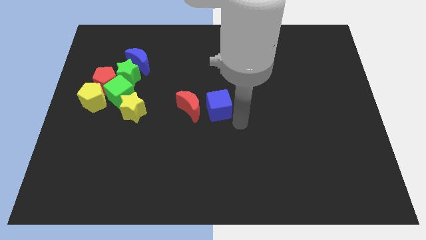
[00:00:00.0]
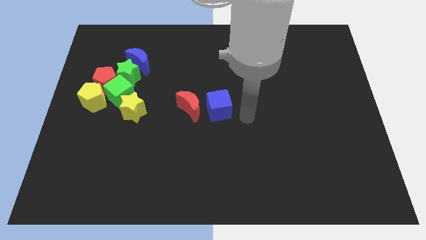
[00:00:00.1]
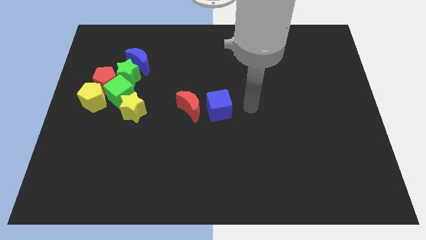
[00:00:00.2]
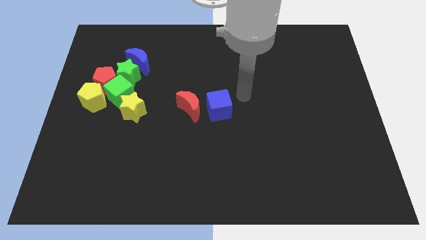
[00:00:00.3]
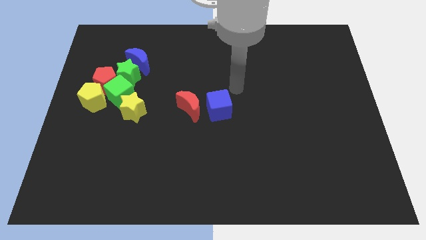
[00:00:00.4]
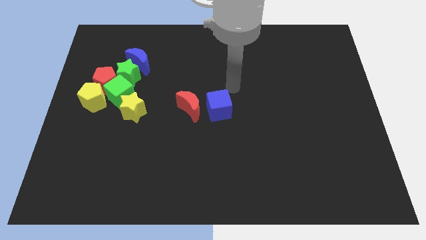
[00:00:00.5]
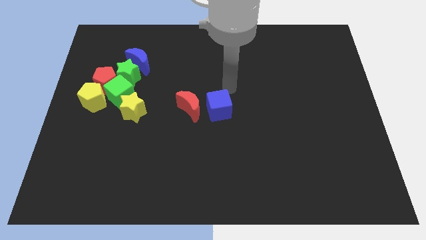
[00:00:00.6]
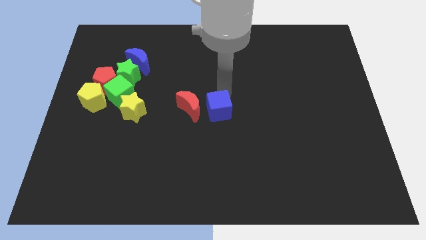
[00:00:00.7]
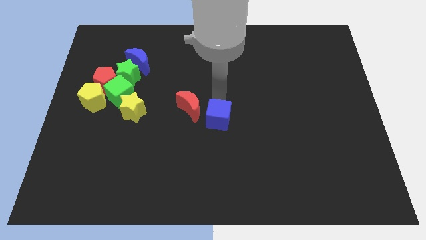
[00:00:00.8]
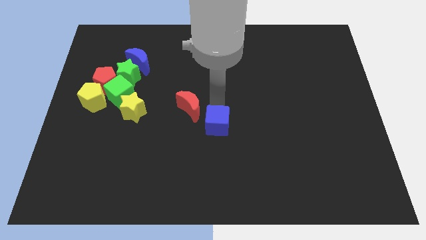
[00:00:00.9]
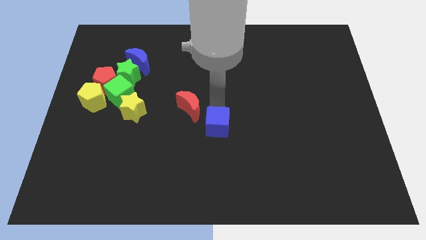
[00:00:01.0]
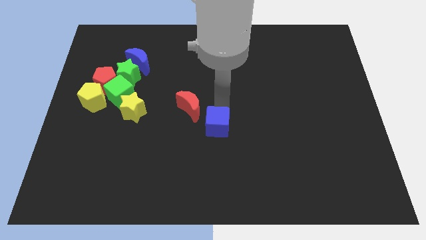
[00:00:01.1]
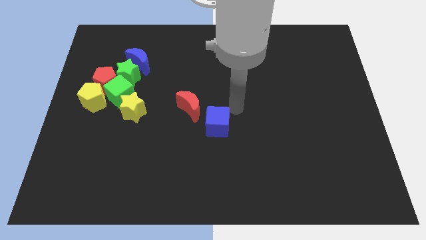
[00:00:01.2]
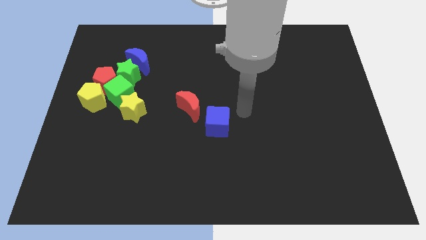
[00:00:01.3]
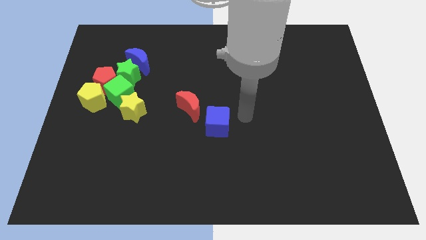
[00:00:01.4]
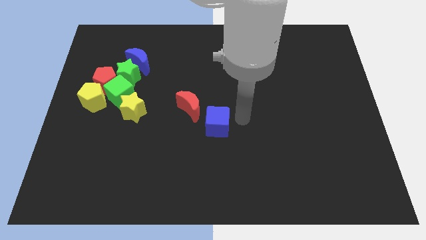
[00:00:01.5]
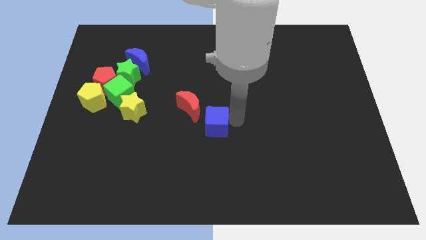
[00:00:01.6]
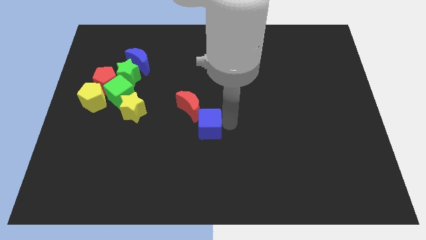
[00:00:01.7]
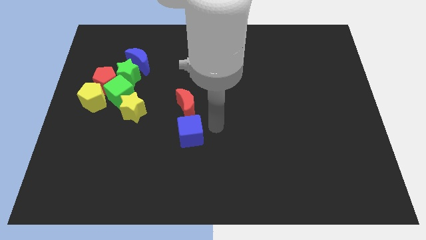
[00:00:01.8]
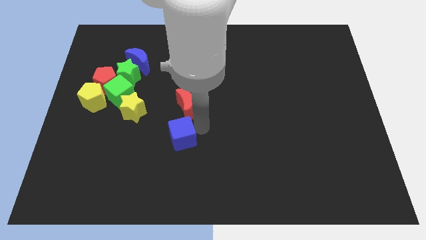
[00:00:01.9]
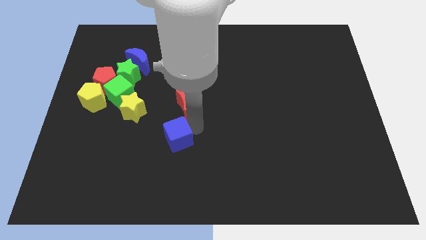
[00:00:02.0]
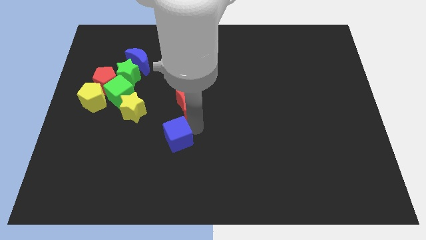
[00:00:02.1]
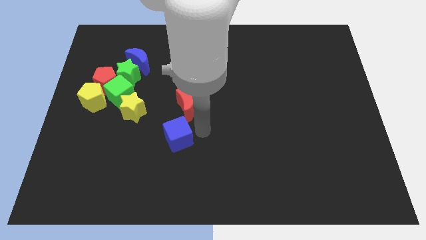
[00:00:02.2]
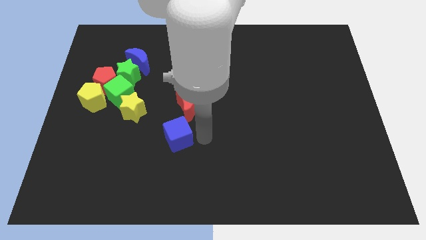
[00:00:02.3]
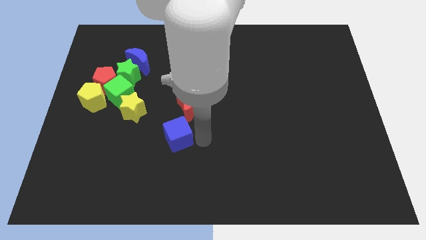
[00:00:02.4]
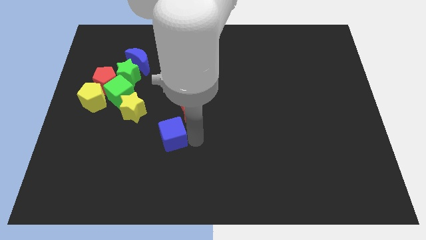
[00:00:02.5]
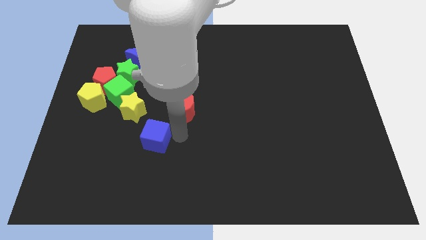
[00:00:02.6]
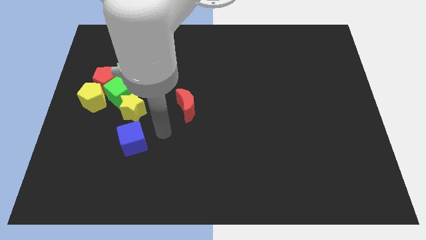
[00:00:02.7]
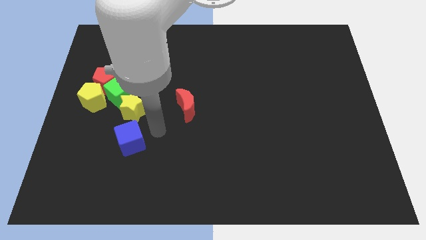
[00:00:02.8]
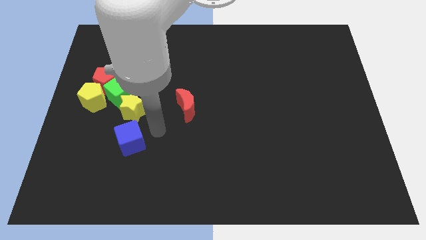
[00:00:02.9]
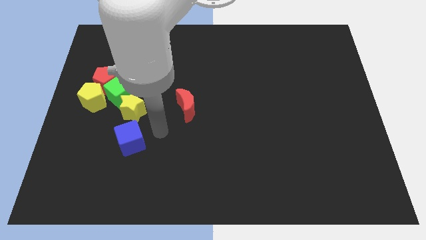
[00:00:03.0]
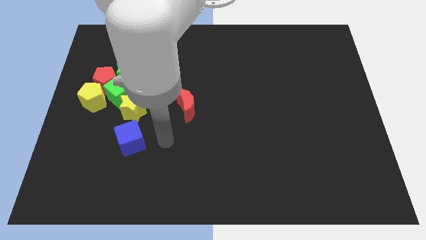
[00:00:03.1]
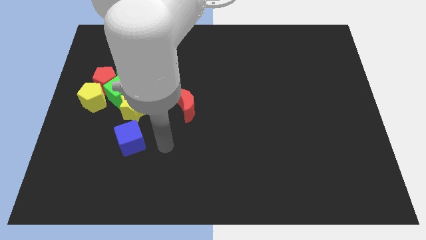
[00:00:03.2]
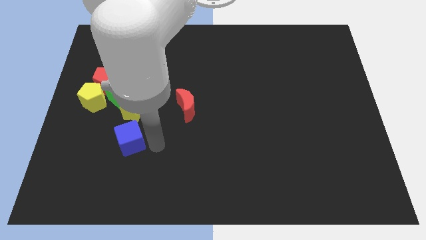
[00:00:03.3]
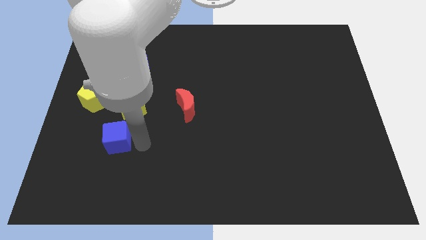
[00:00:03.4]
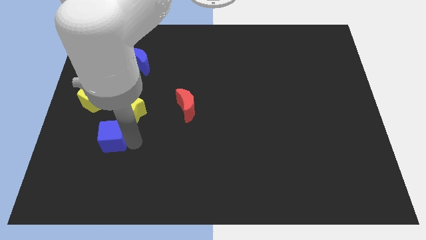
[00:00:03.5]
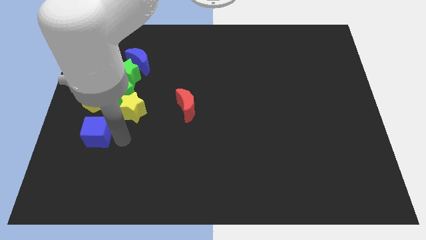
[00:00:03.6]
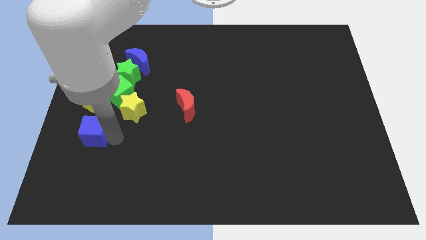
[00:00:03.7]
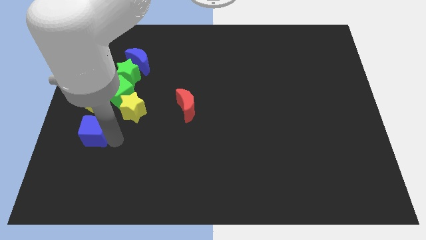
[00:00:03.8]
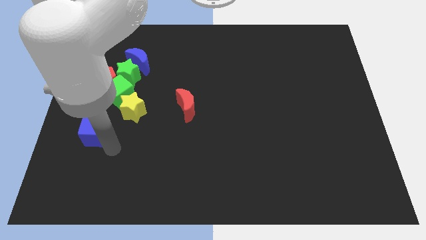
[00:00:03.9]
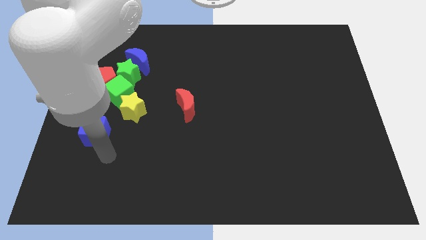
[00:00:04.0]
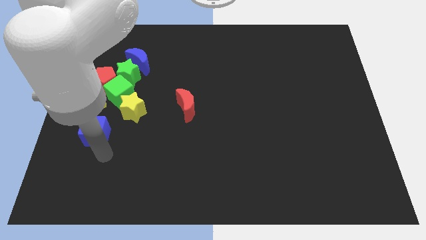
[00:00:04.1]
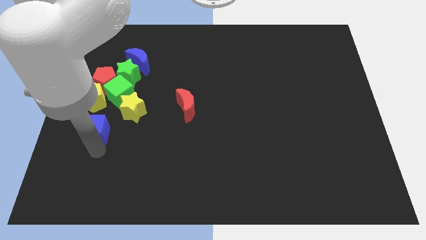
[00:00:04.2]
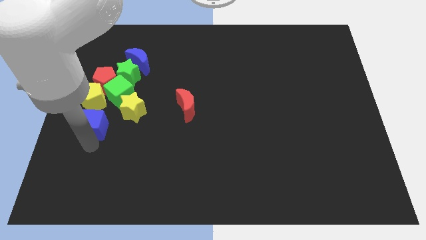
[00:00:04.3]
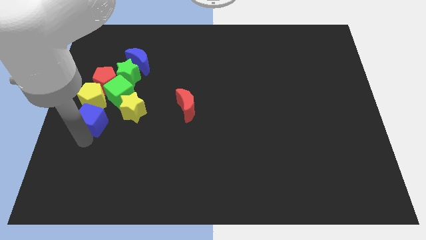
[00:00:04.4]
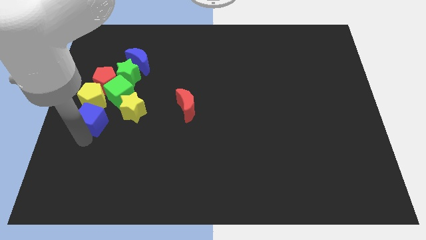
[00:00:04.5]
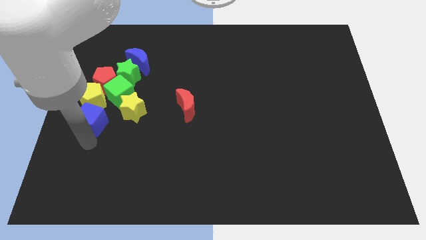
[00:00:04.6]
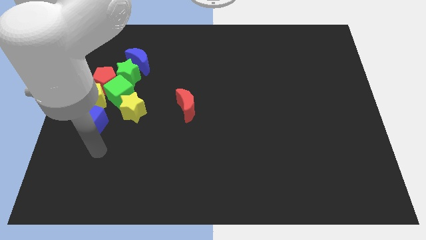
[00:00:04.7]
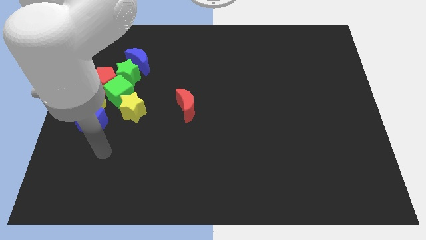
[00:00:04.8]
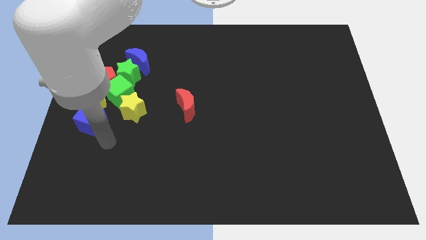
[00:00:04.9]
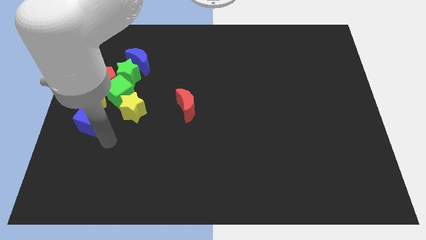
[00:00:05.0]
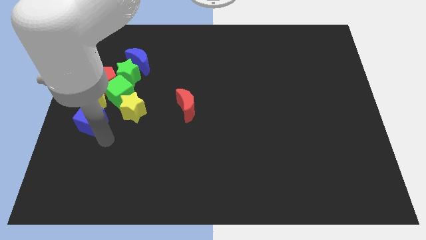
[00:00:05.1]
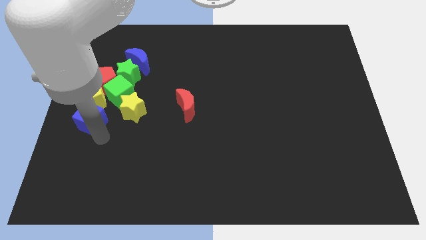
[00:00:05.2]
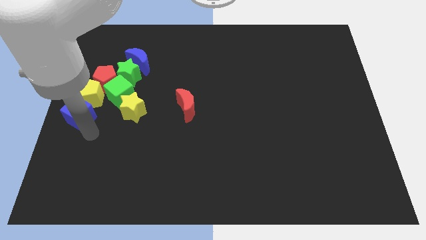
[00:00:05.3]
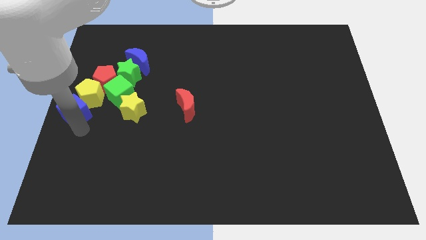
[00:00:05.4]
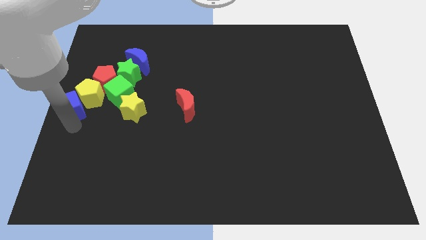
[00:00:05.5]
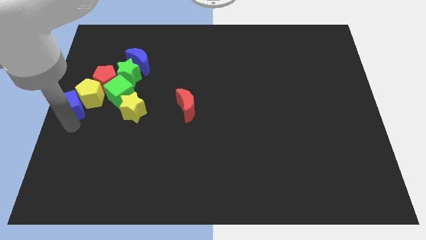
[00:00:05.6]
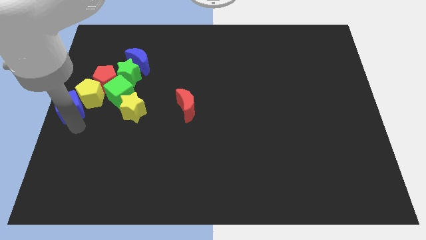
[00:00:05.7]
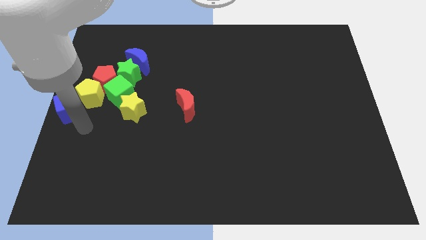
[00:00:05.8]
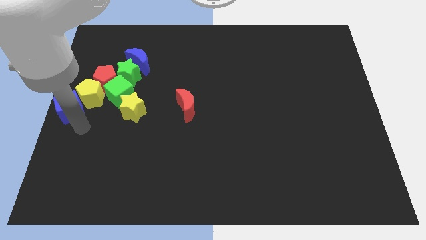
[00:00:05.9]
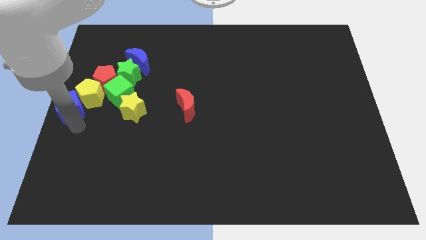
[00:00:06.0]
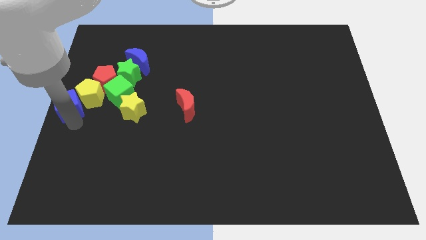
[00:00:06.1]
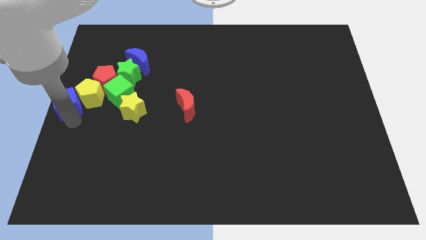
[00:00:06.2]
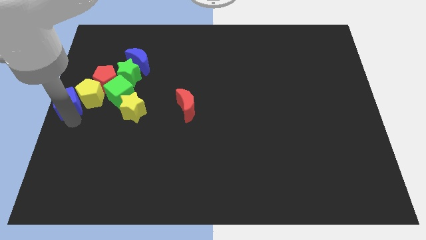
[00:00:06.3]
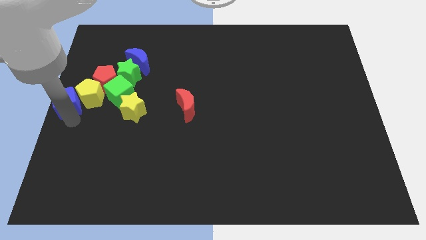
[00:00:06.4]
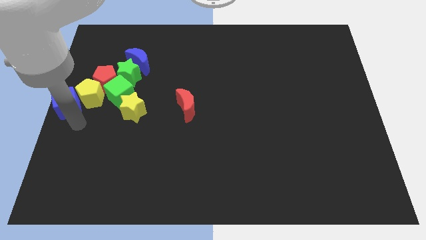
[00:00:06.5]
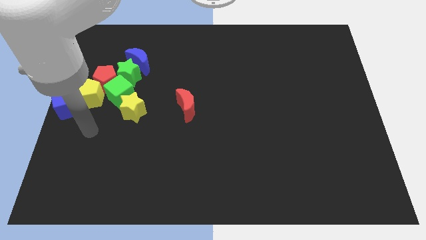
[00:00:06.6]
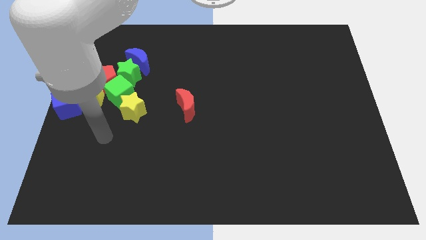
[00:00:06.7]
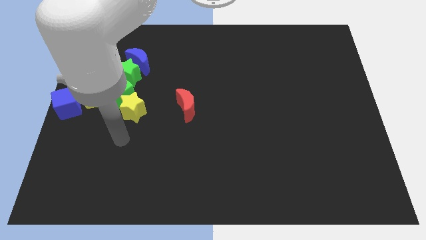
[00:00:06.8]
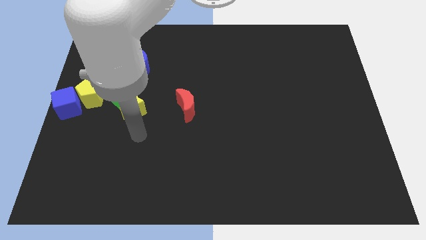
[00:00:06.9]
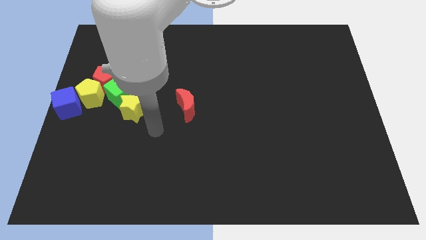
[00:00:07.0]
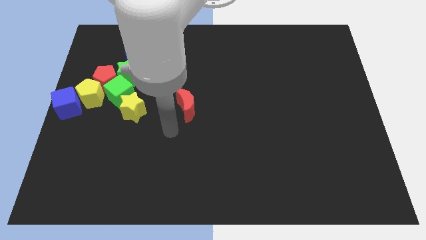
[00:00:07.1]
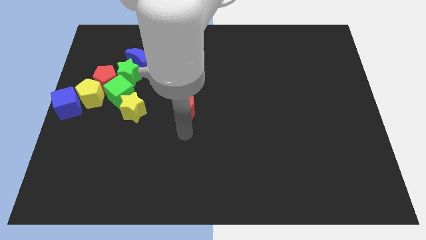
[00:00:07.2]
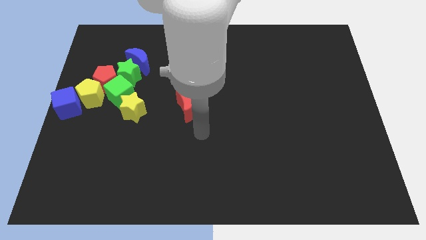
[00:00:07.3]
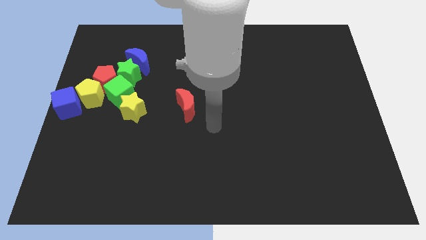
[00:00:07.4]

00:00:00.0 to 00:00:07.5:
move the blue cube to the left side of the yellow pentagon

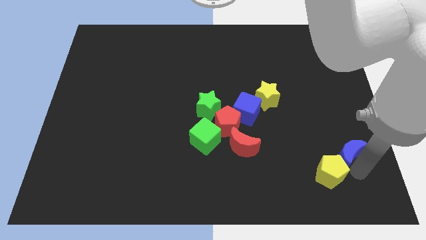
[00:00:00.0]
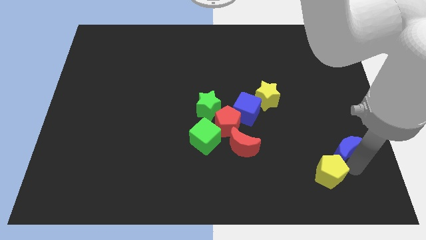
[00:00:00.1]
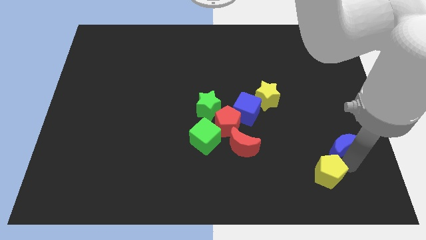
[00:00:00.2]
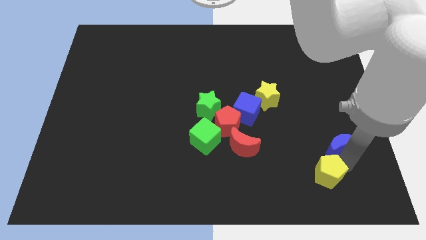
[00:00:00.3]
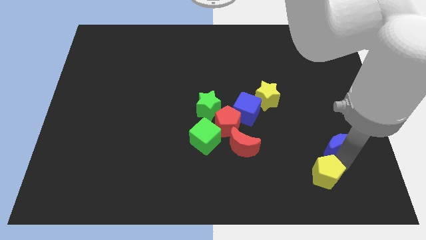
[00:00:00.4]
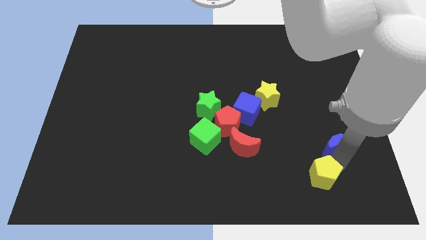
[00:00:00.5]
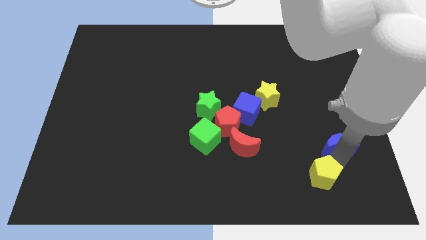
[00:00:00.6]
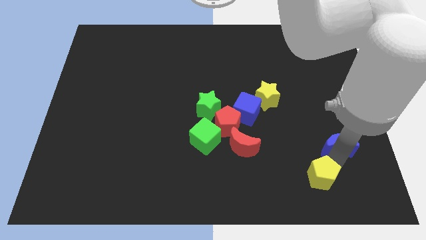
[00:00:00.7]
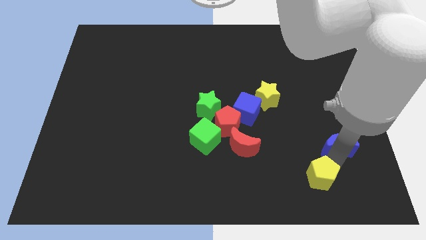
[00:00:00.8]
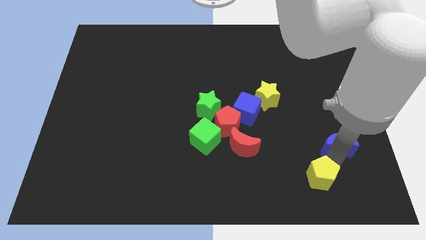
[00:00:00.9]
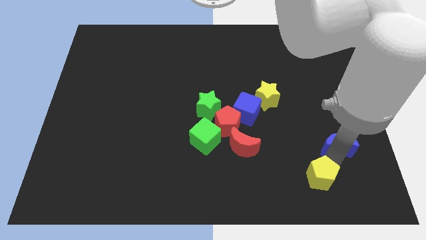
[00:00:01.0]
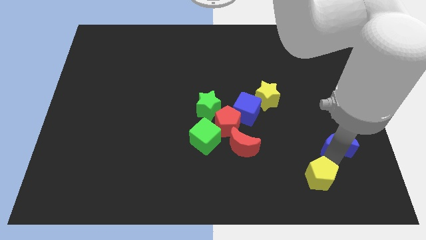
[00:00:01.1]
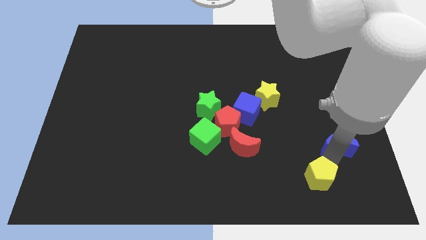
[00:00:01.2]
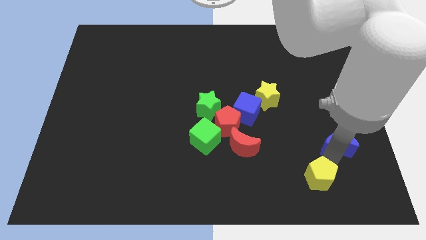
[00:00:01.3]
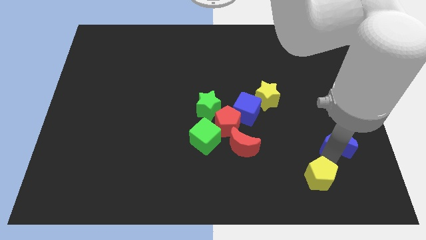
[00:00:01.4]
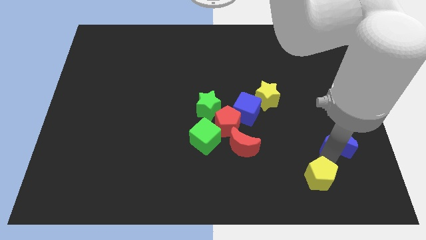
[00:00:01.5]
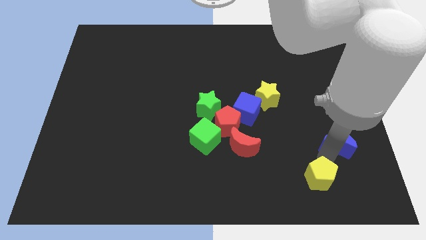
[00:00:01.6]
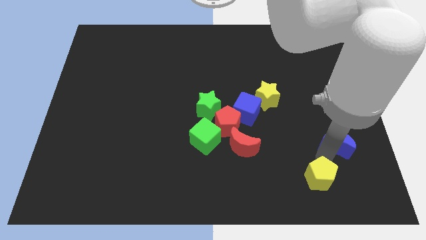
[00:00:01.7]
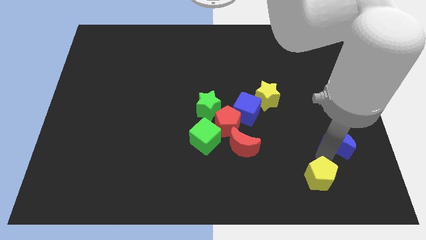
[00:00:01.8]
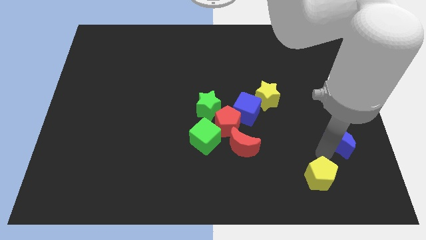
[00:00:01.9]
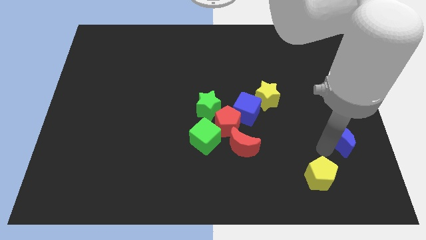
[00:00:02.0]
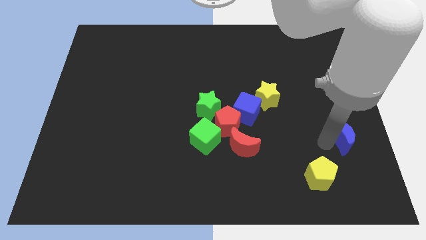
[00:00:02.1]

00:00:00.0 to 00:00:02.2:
separate the blue moon from the yellow pentagon
